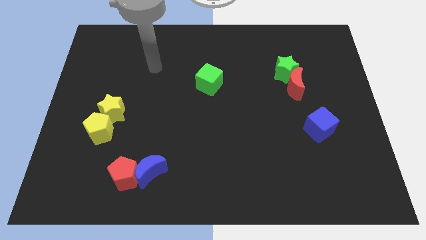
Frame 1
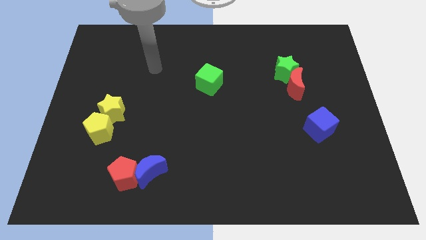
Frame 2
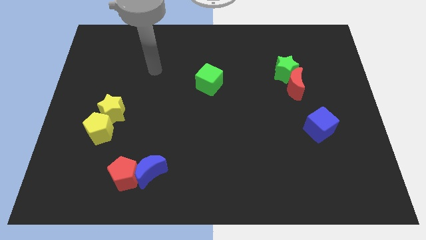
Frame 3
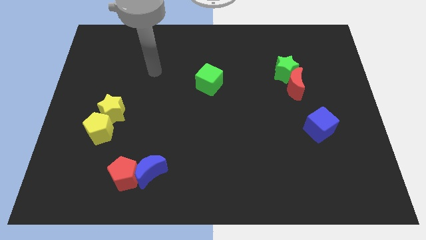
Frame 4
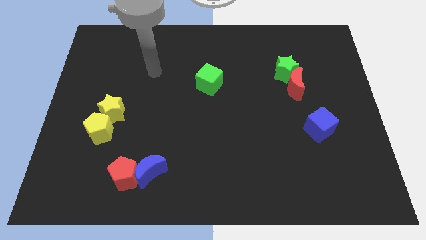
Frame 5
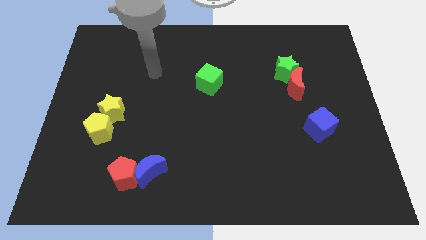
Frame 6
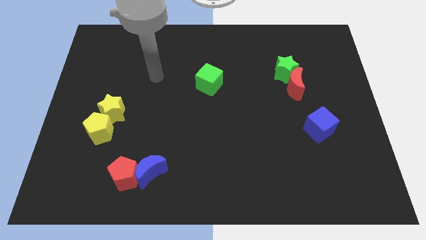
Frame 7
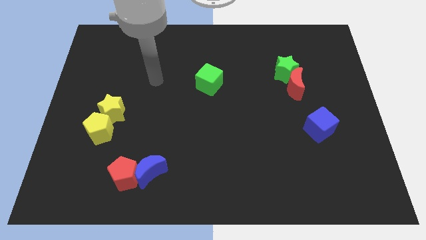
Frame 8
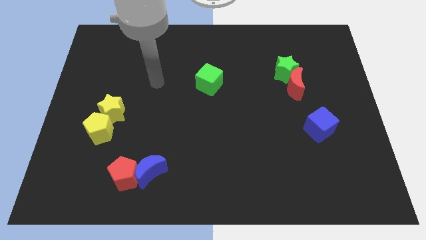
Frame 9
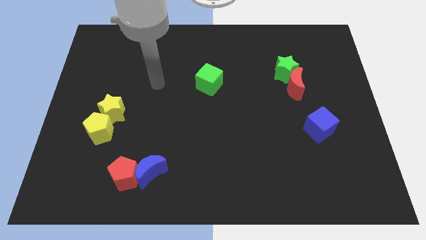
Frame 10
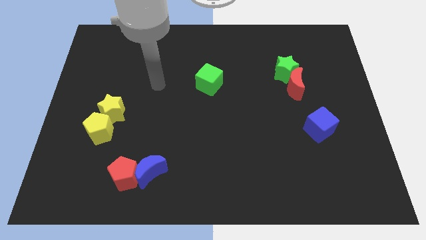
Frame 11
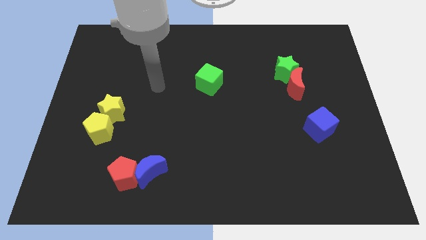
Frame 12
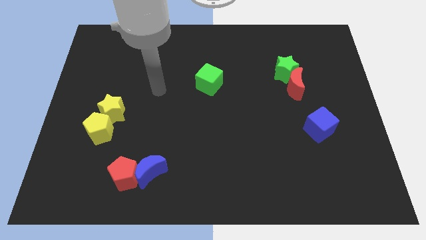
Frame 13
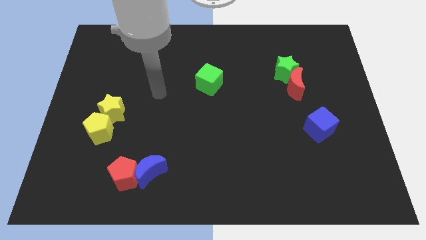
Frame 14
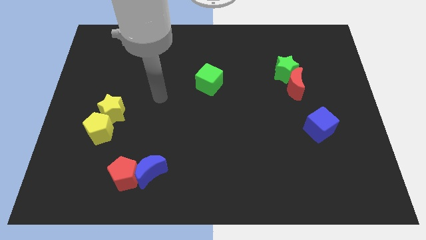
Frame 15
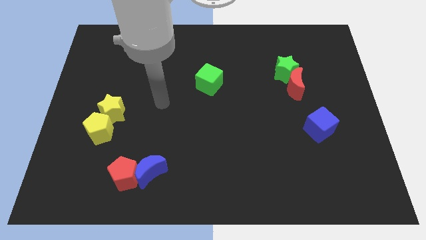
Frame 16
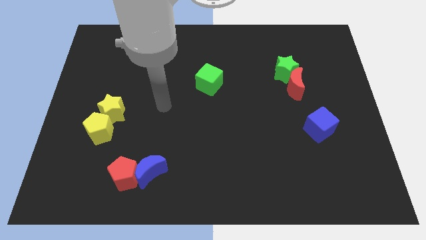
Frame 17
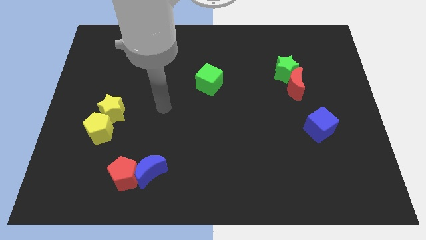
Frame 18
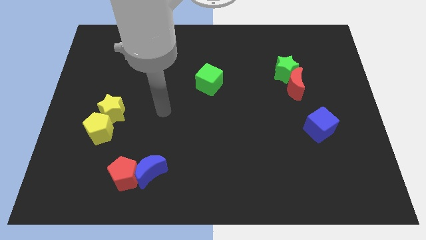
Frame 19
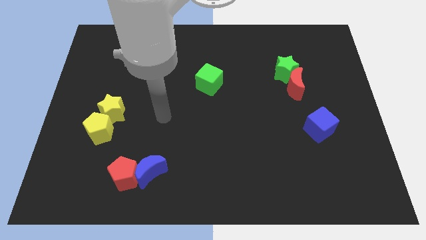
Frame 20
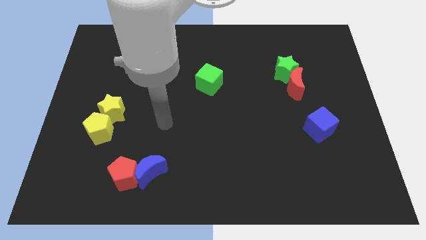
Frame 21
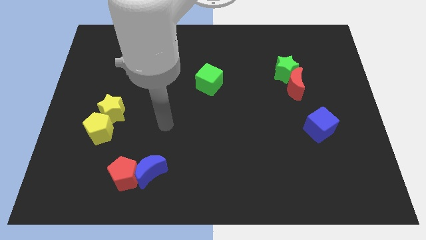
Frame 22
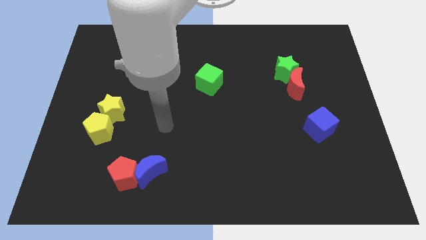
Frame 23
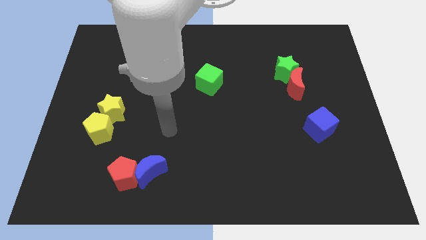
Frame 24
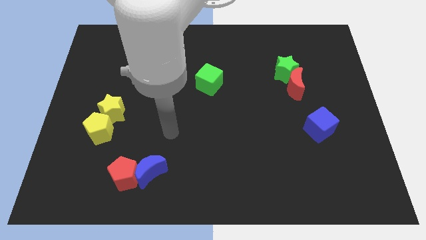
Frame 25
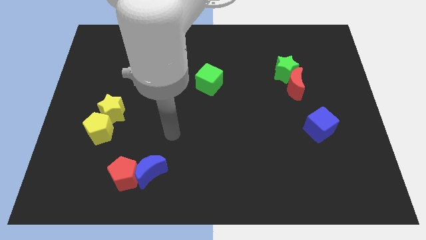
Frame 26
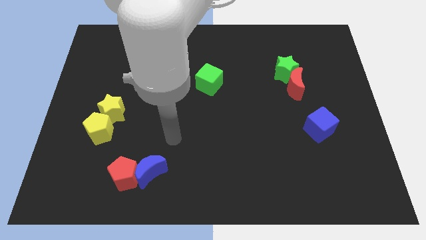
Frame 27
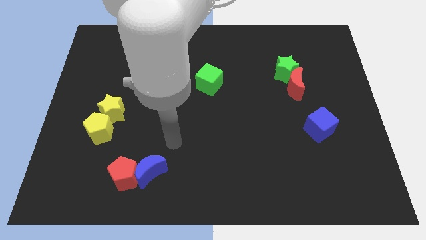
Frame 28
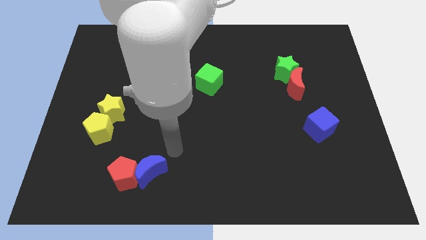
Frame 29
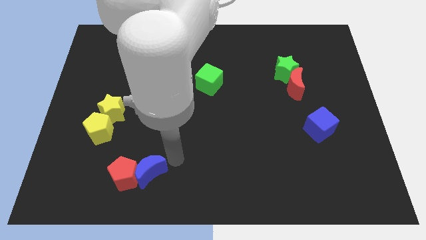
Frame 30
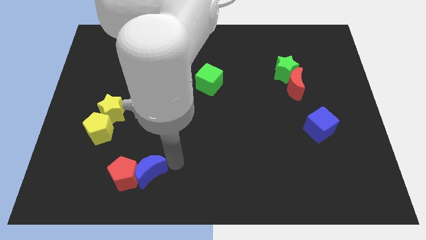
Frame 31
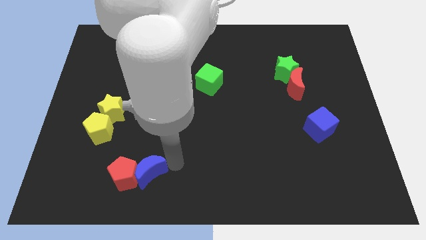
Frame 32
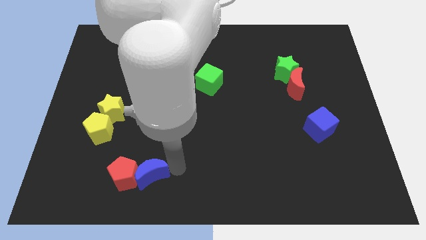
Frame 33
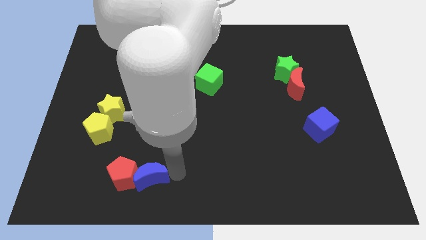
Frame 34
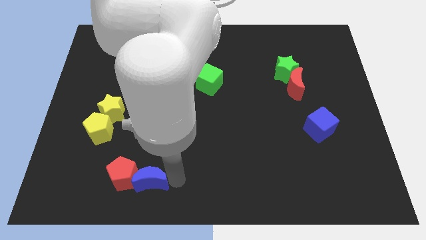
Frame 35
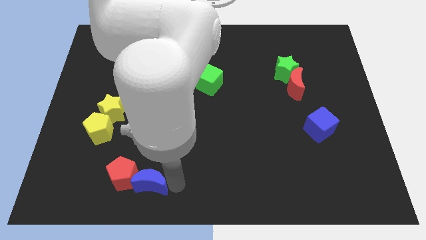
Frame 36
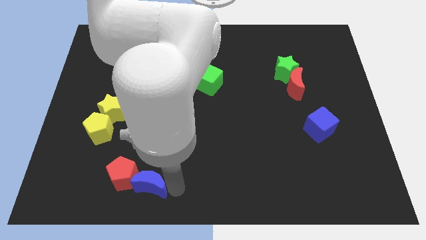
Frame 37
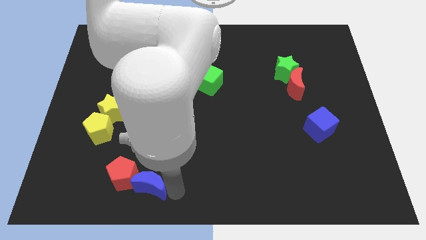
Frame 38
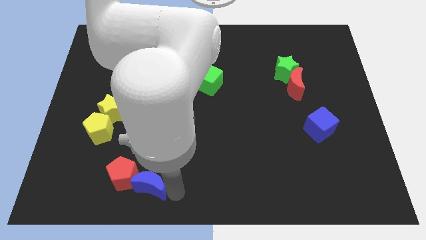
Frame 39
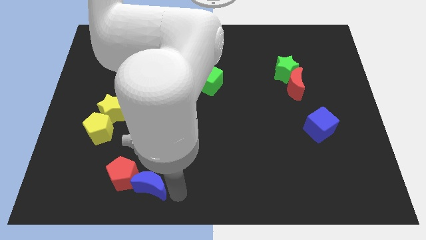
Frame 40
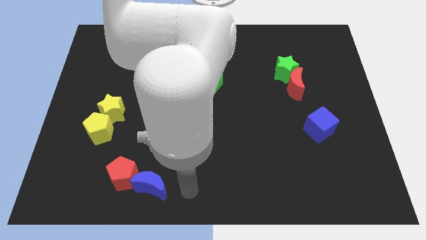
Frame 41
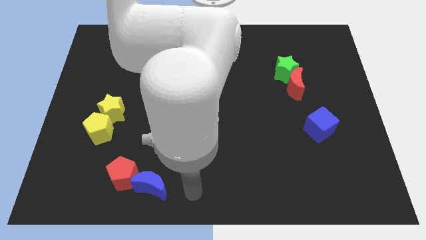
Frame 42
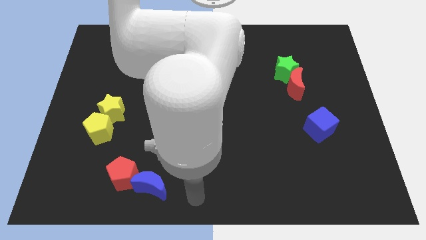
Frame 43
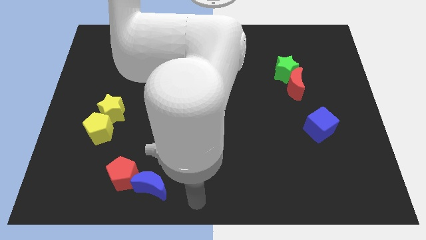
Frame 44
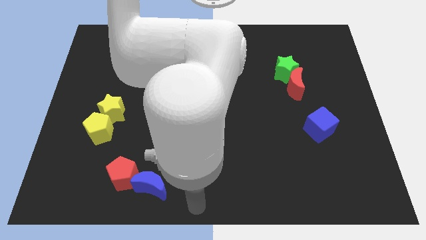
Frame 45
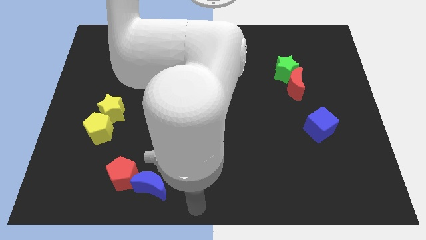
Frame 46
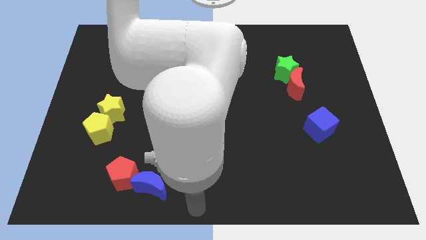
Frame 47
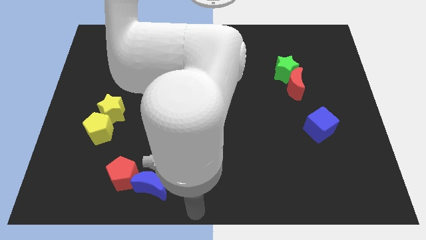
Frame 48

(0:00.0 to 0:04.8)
move your arm to the bottom center

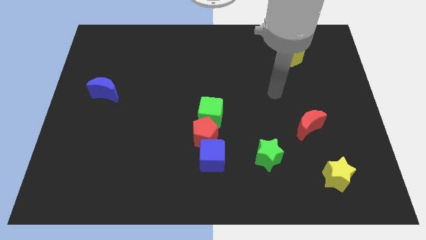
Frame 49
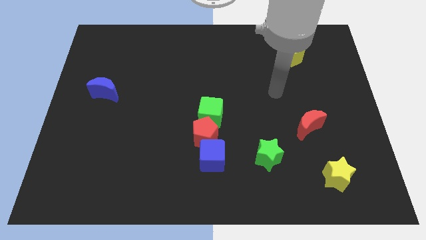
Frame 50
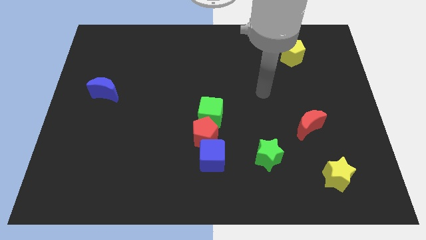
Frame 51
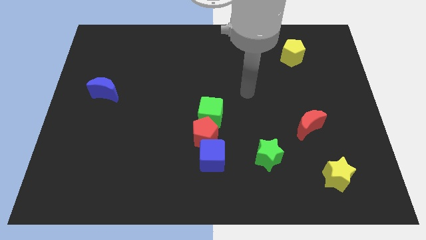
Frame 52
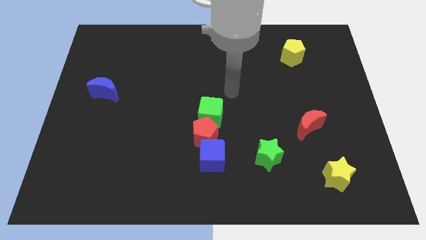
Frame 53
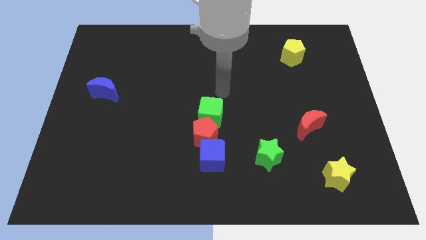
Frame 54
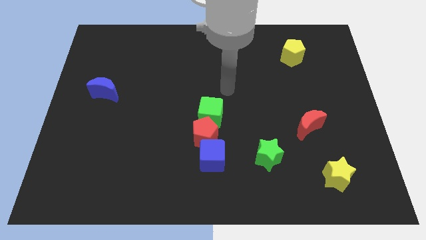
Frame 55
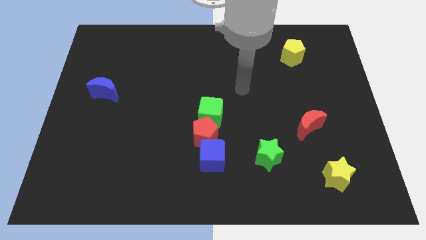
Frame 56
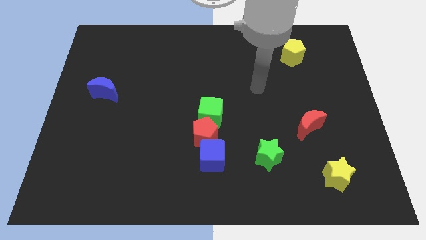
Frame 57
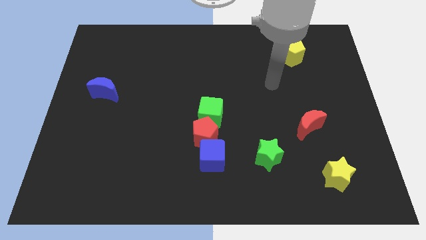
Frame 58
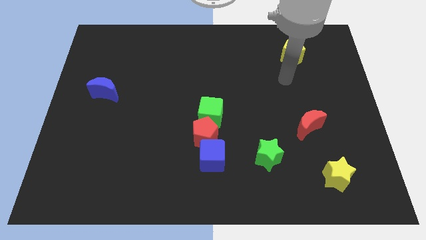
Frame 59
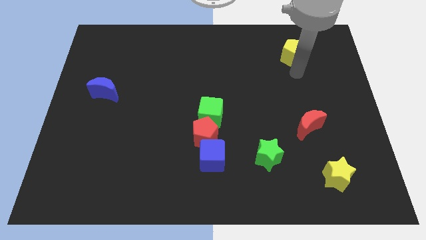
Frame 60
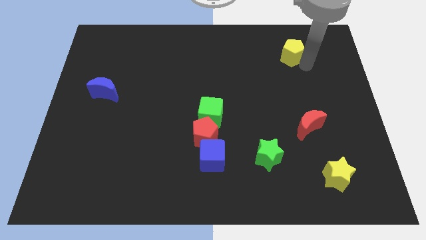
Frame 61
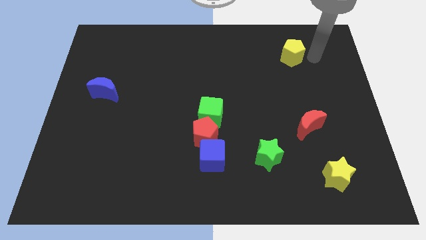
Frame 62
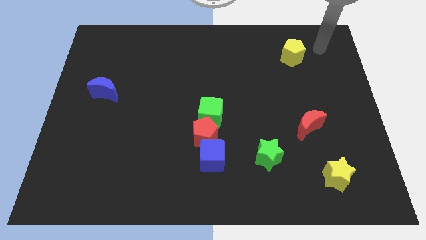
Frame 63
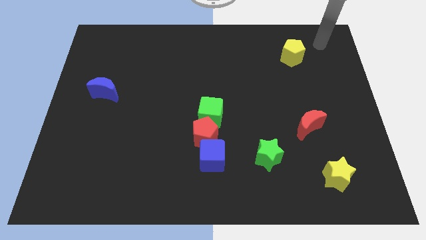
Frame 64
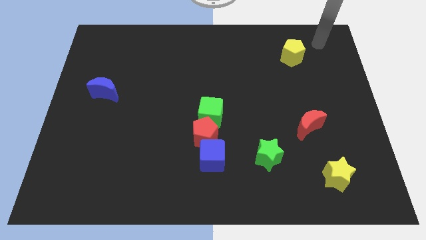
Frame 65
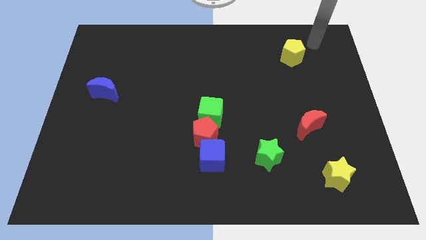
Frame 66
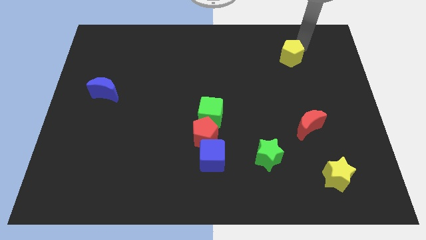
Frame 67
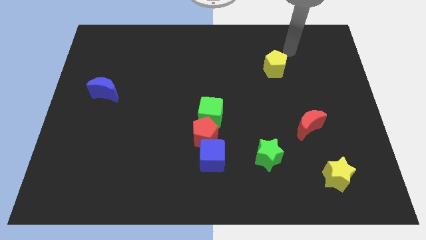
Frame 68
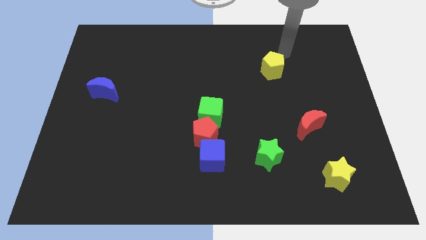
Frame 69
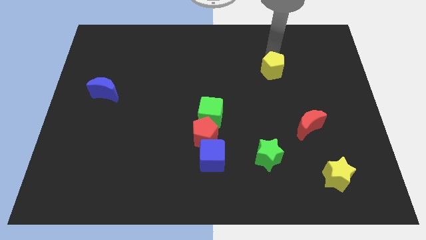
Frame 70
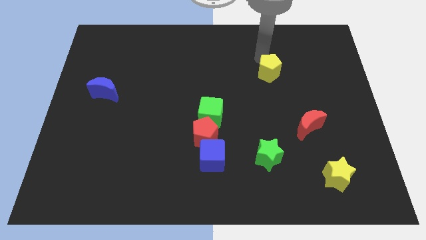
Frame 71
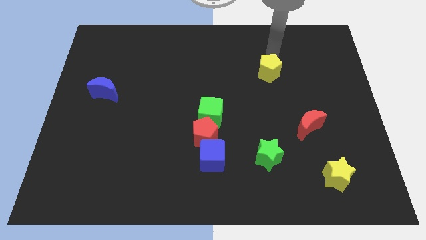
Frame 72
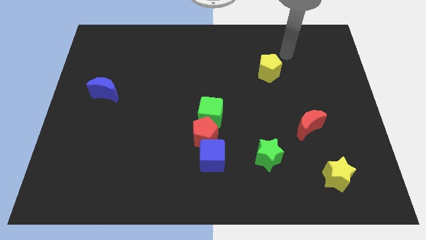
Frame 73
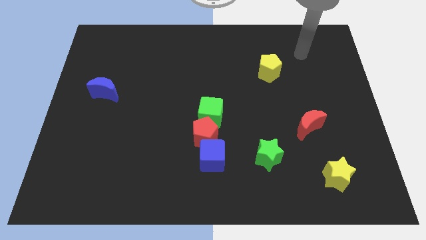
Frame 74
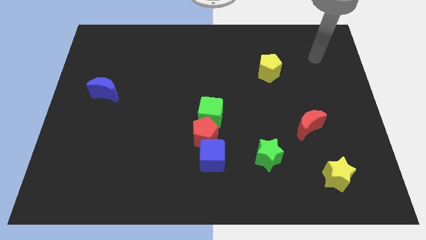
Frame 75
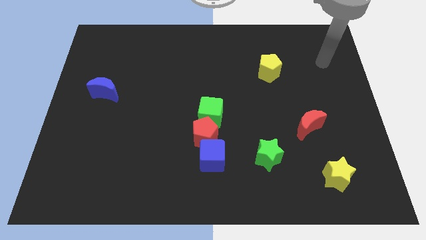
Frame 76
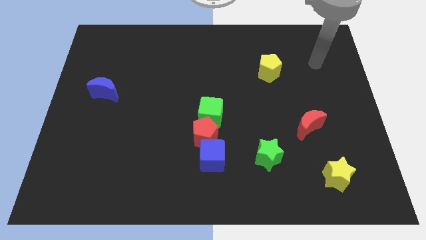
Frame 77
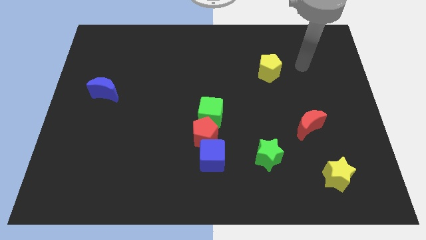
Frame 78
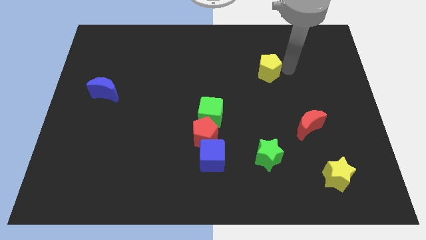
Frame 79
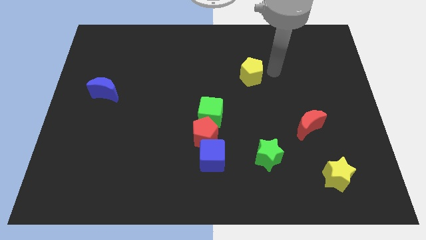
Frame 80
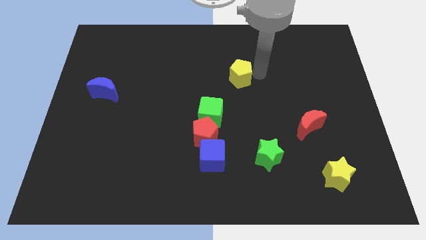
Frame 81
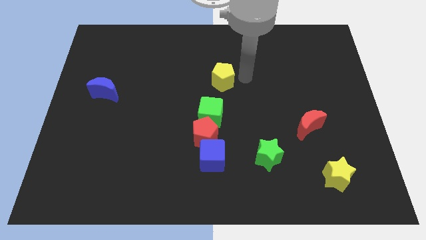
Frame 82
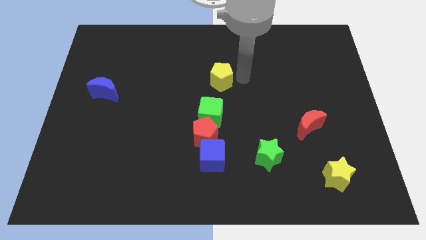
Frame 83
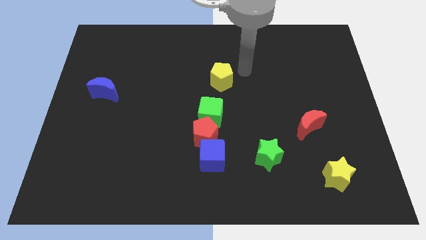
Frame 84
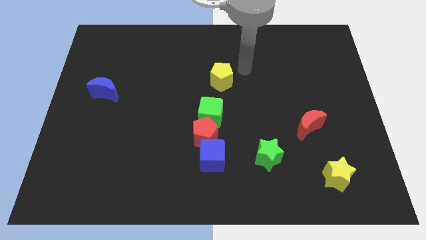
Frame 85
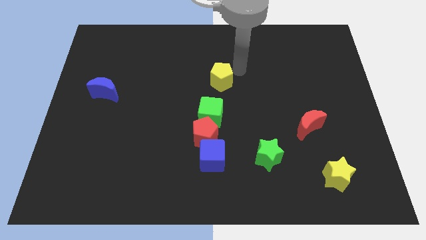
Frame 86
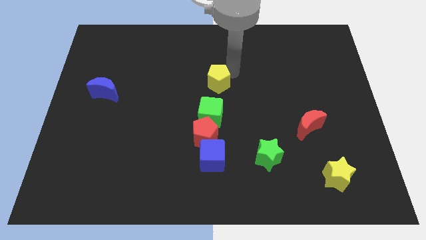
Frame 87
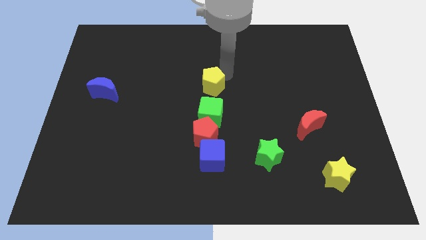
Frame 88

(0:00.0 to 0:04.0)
push yellow pentagon above green cube

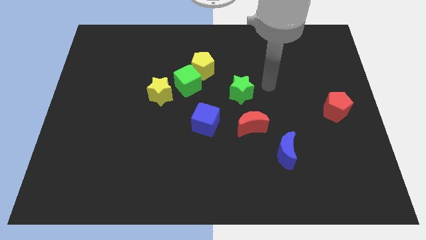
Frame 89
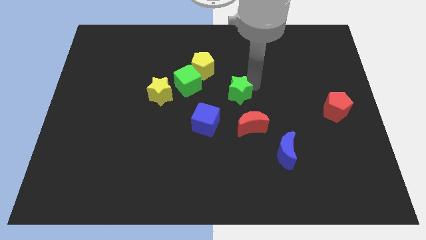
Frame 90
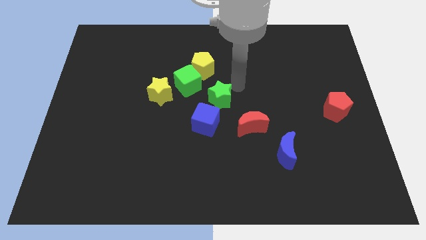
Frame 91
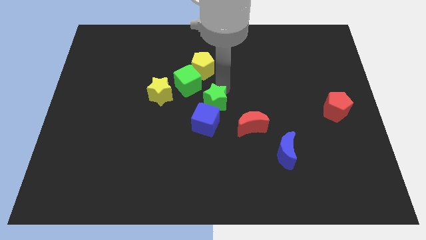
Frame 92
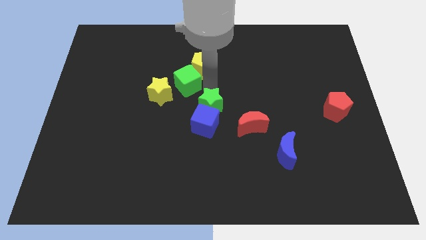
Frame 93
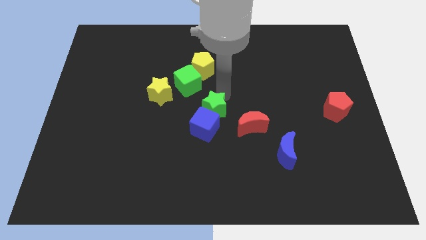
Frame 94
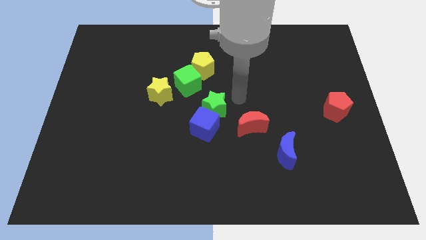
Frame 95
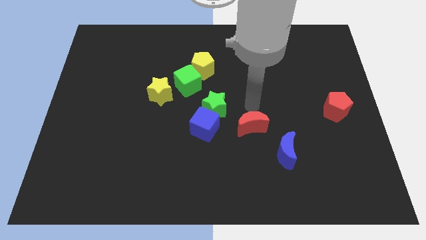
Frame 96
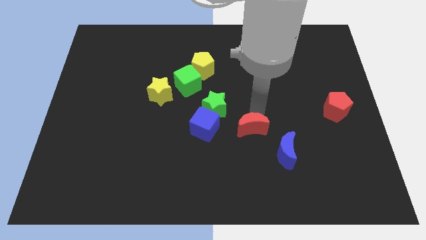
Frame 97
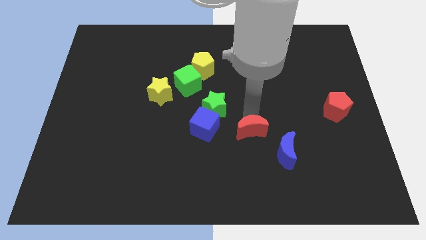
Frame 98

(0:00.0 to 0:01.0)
place the green star above the blue cube
